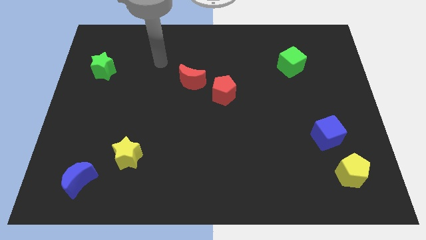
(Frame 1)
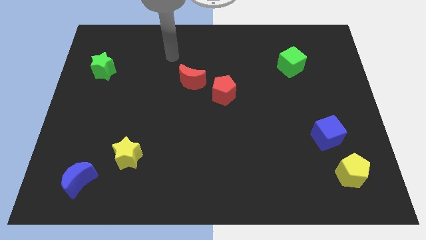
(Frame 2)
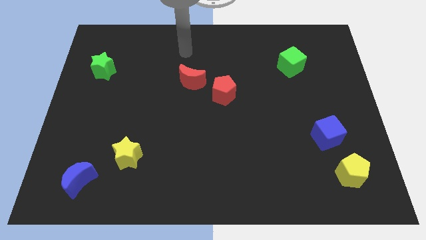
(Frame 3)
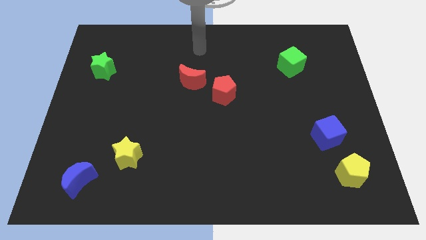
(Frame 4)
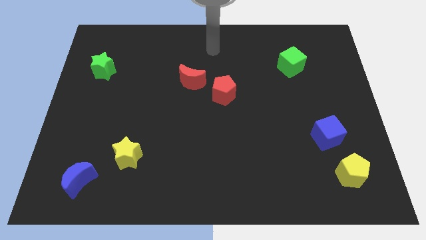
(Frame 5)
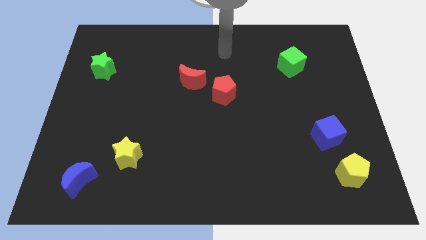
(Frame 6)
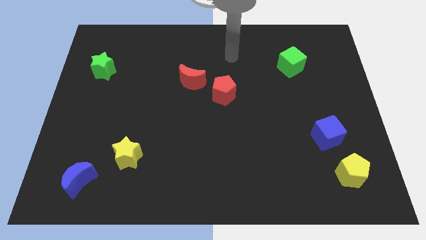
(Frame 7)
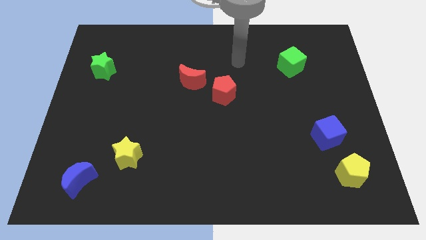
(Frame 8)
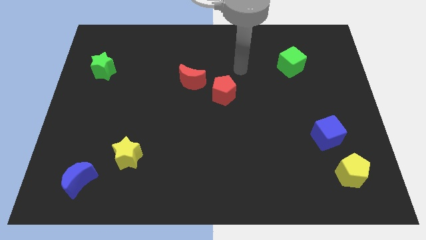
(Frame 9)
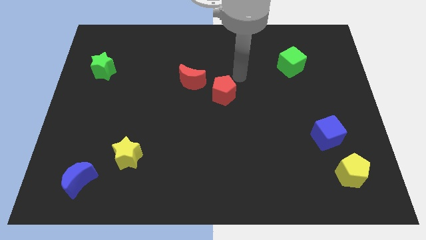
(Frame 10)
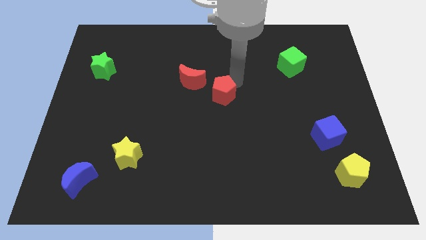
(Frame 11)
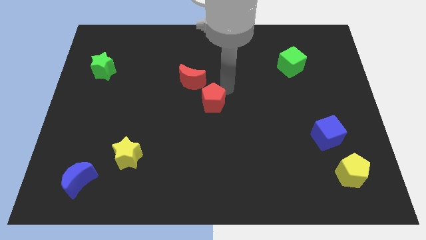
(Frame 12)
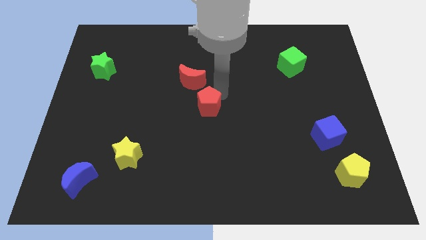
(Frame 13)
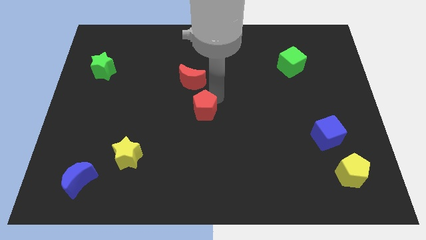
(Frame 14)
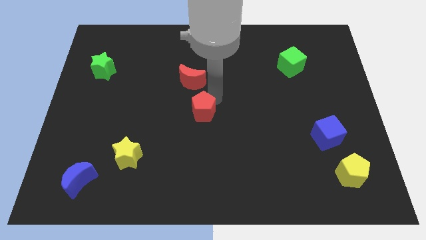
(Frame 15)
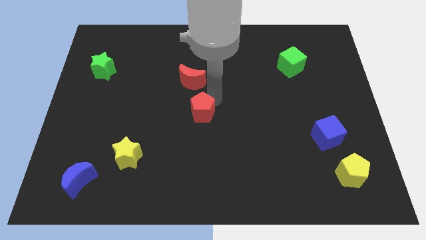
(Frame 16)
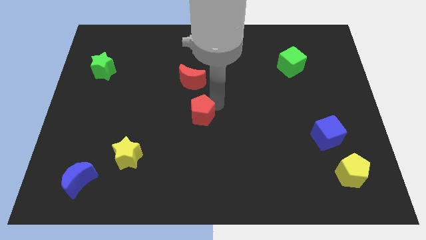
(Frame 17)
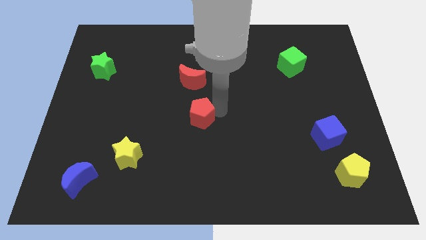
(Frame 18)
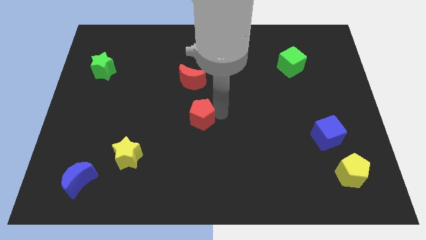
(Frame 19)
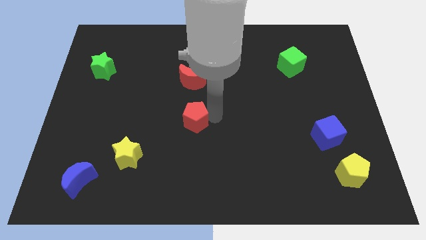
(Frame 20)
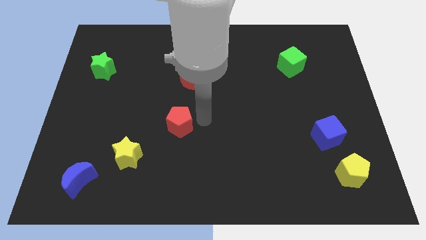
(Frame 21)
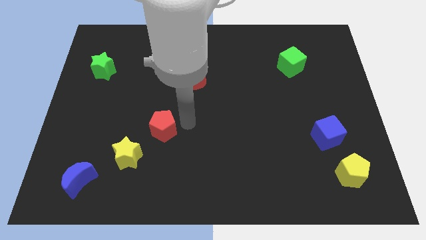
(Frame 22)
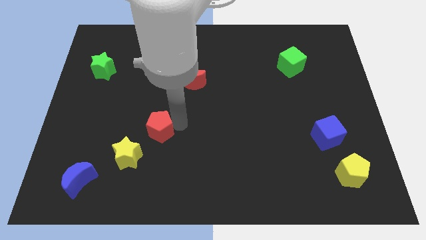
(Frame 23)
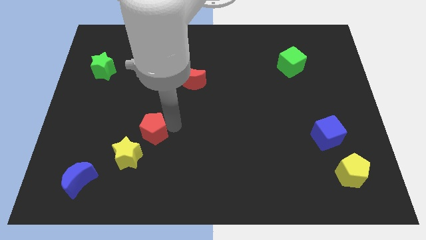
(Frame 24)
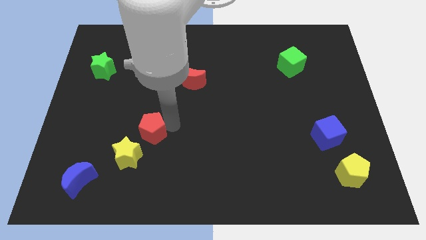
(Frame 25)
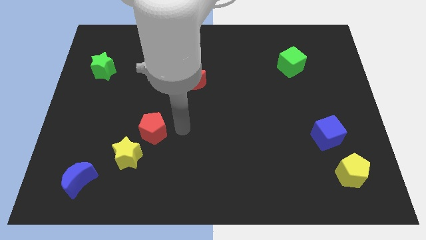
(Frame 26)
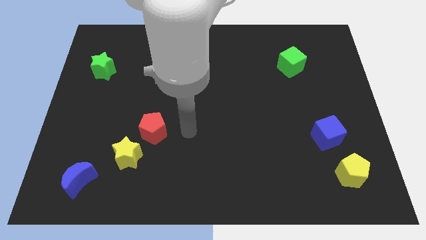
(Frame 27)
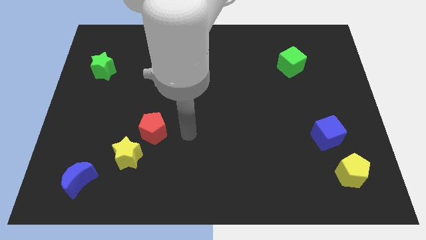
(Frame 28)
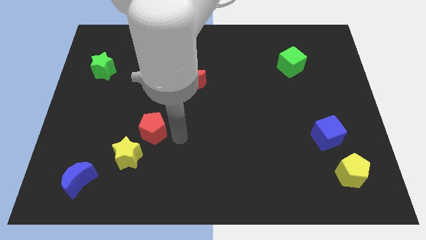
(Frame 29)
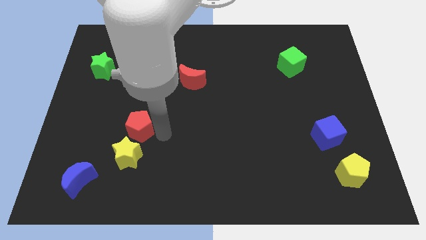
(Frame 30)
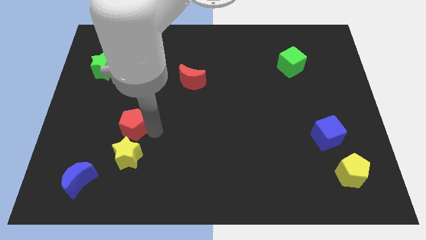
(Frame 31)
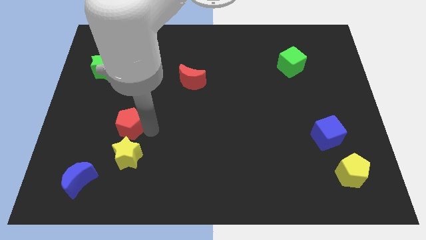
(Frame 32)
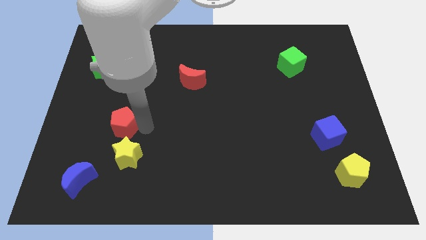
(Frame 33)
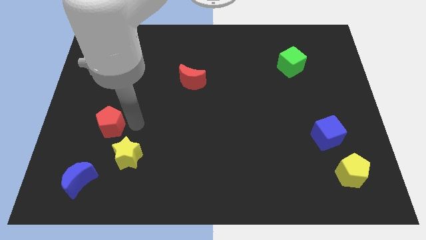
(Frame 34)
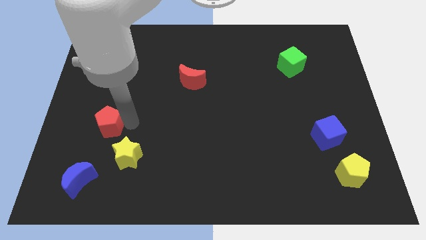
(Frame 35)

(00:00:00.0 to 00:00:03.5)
push the red pentagon diagonally bottom left to the red moon

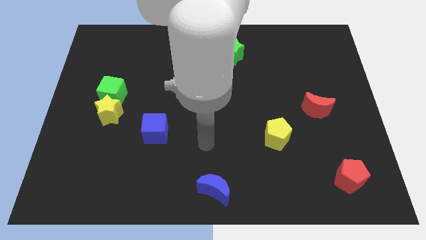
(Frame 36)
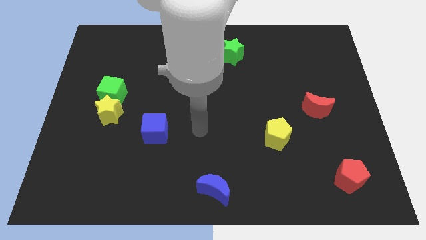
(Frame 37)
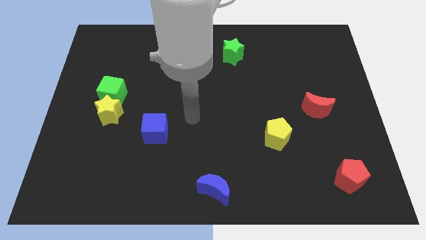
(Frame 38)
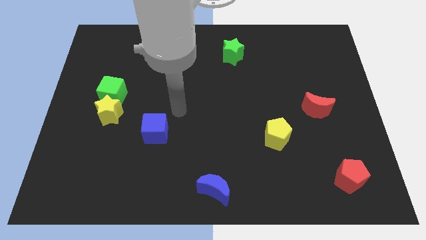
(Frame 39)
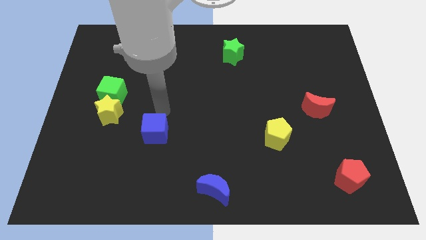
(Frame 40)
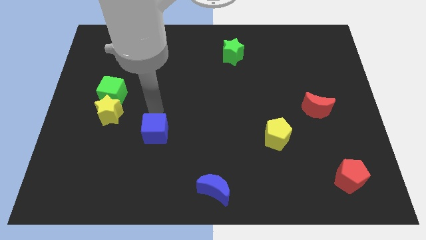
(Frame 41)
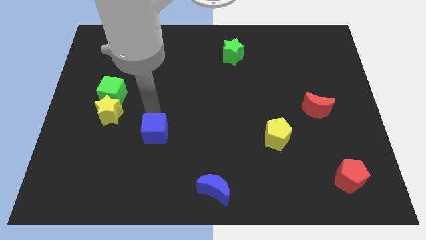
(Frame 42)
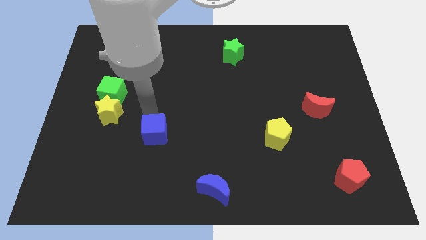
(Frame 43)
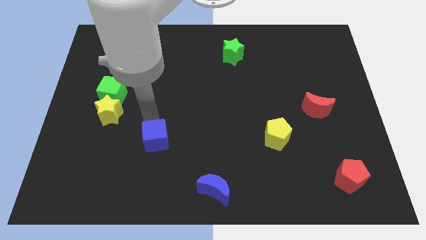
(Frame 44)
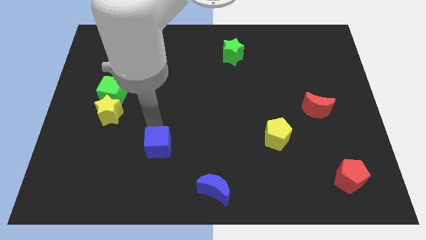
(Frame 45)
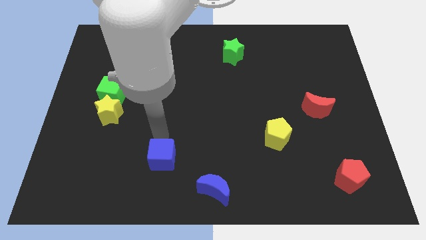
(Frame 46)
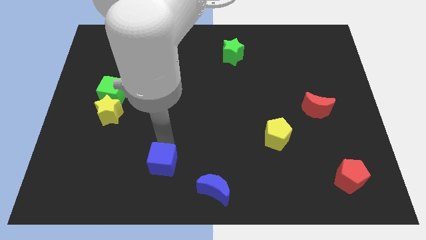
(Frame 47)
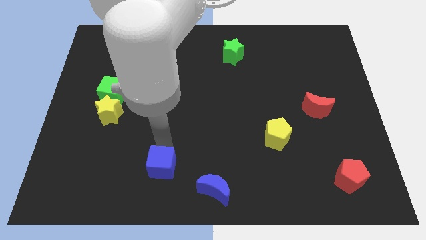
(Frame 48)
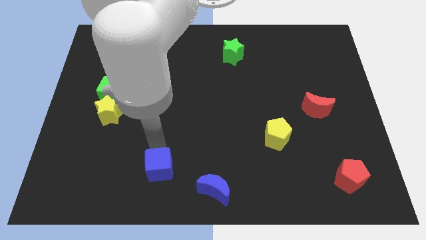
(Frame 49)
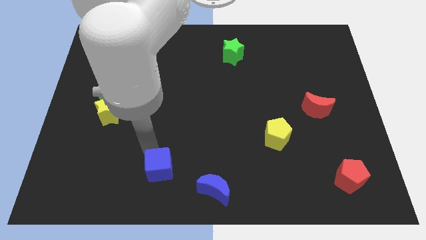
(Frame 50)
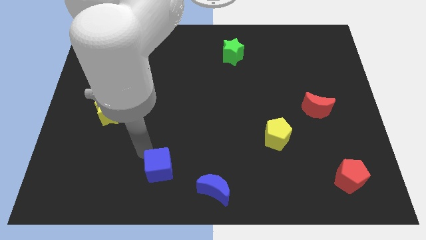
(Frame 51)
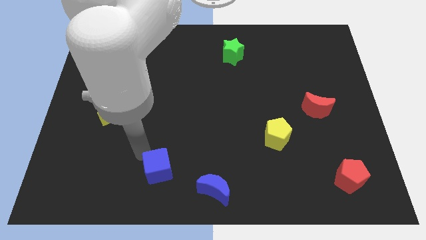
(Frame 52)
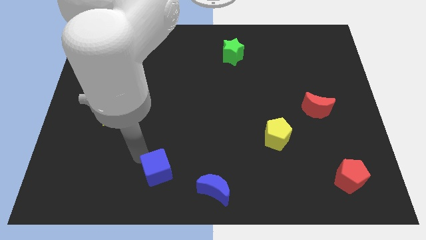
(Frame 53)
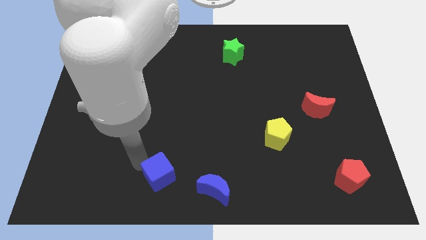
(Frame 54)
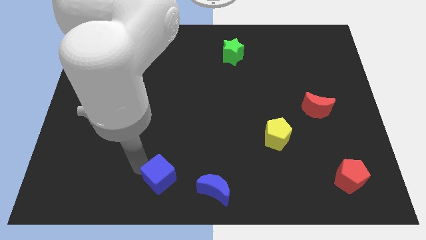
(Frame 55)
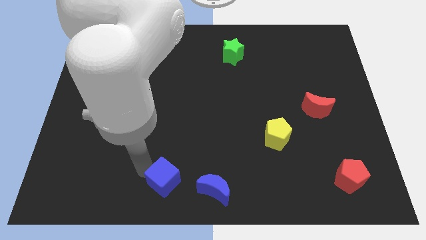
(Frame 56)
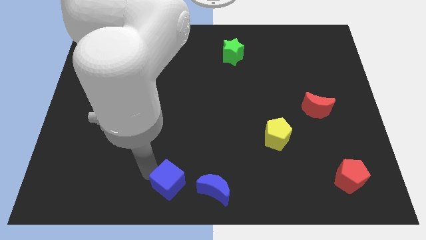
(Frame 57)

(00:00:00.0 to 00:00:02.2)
slide the blue cube towards the blue moon

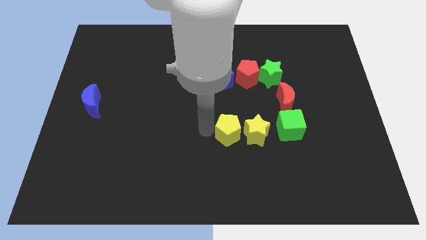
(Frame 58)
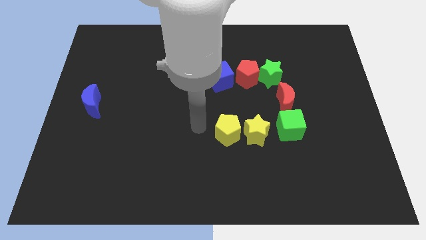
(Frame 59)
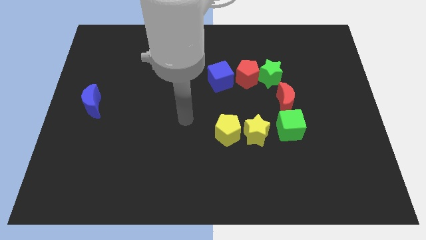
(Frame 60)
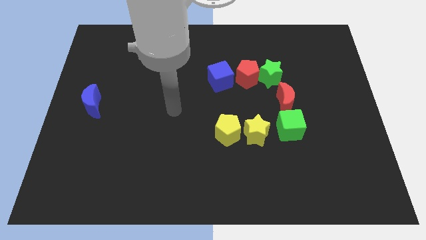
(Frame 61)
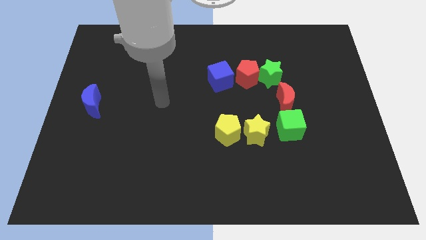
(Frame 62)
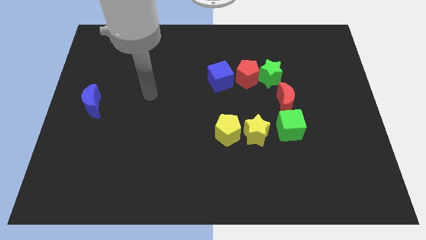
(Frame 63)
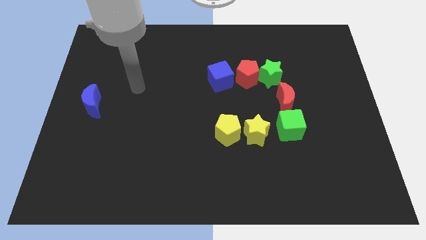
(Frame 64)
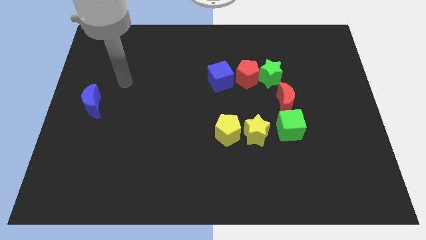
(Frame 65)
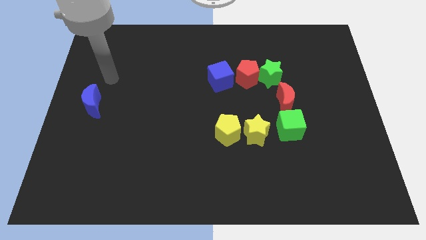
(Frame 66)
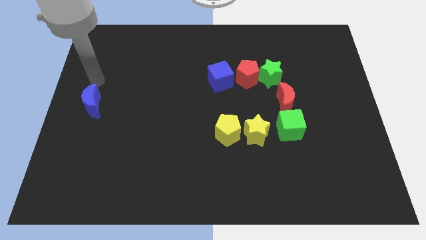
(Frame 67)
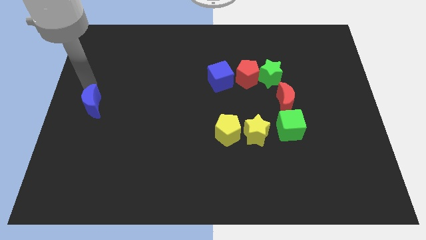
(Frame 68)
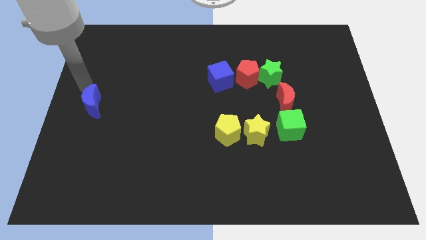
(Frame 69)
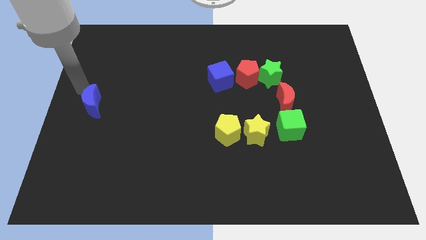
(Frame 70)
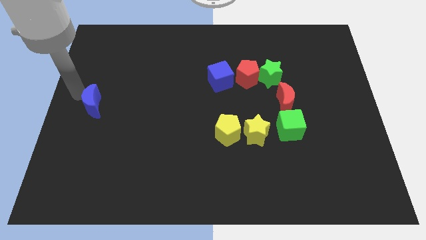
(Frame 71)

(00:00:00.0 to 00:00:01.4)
move your hand towards the blue crescent

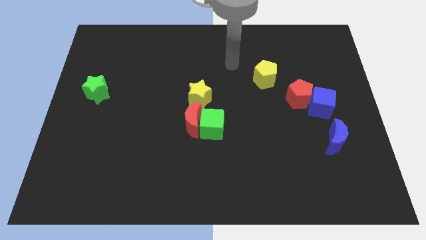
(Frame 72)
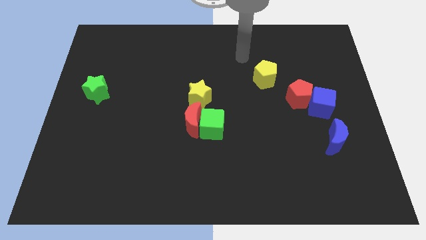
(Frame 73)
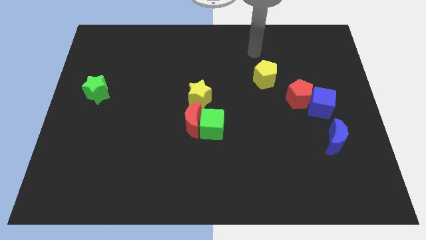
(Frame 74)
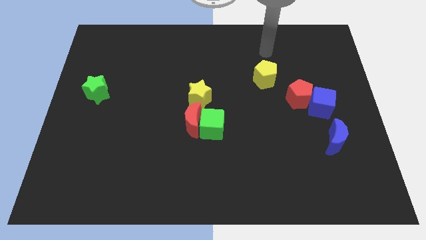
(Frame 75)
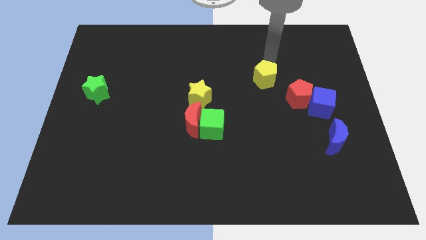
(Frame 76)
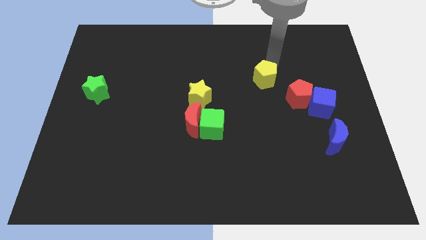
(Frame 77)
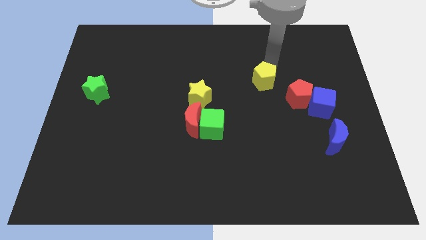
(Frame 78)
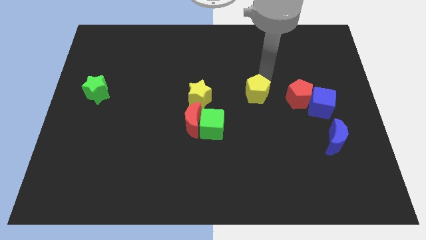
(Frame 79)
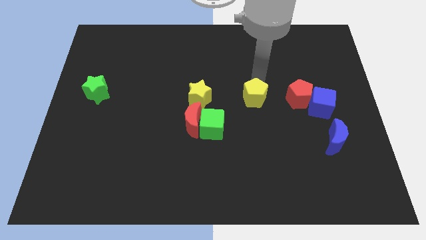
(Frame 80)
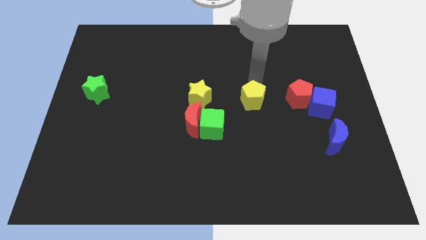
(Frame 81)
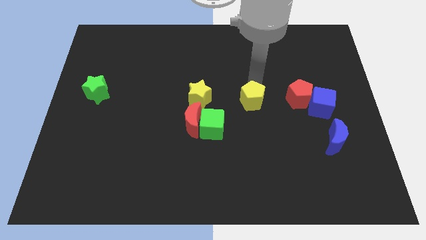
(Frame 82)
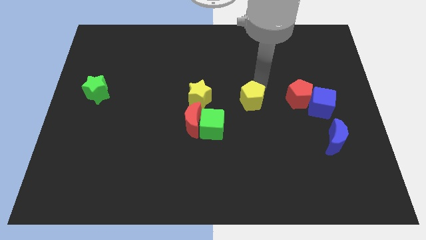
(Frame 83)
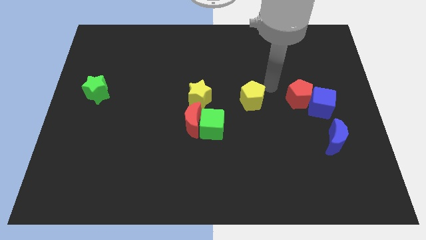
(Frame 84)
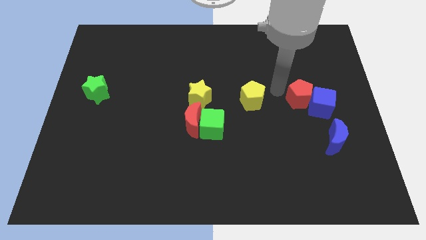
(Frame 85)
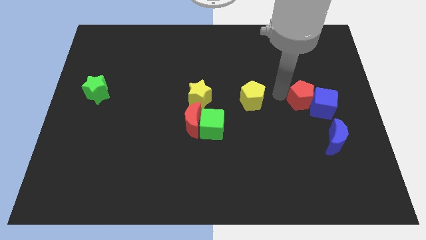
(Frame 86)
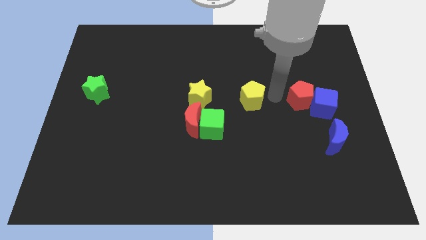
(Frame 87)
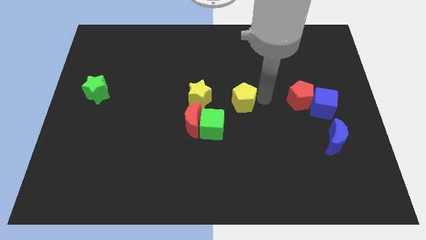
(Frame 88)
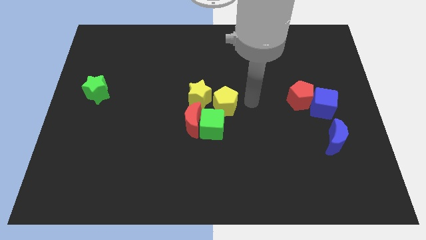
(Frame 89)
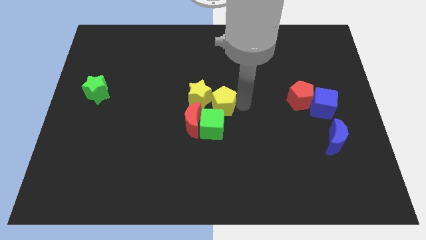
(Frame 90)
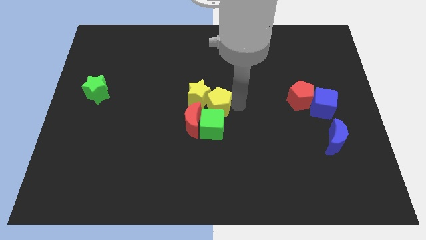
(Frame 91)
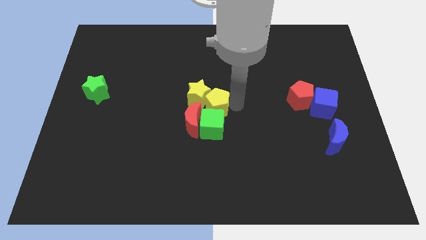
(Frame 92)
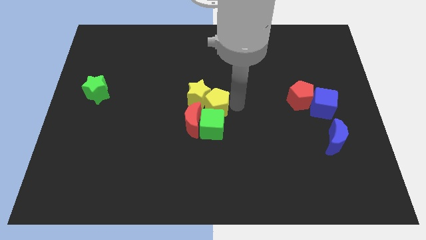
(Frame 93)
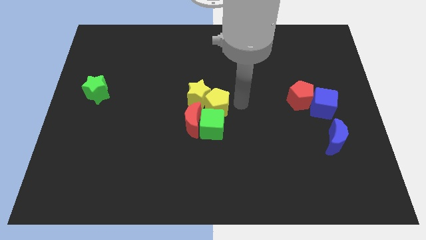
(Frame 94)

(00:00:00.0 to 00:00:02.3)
push the yellow pentagon into yellow star
